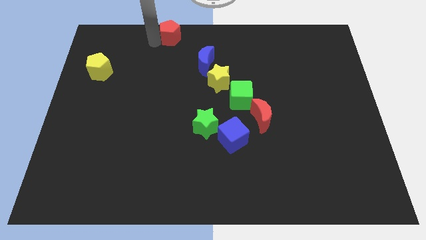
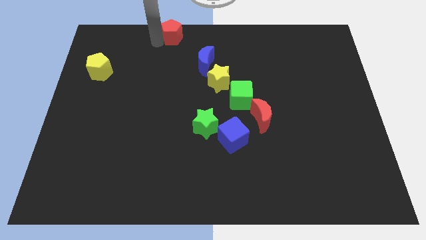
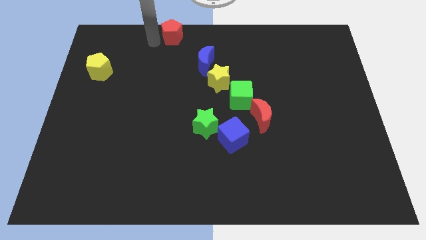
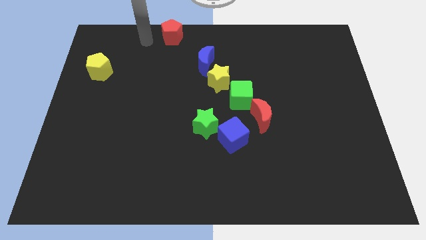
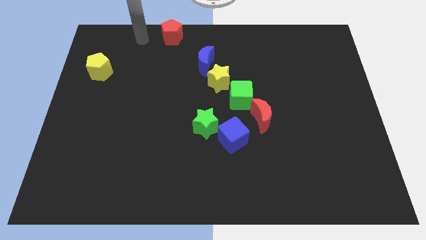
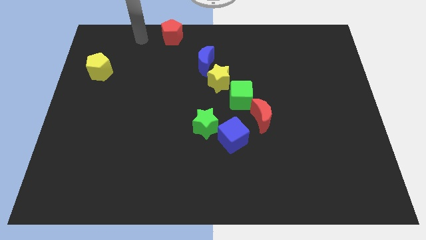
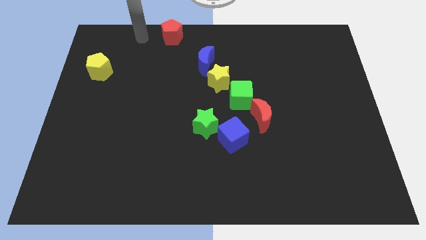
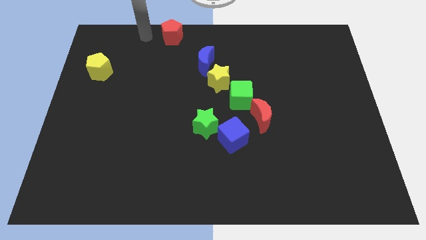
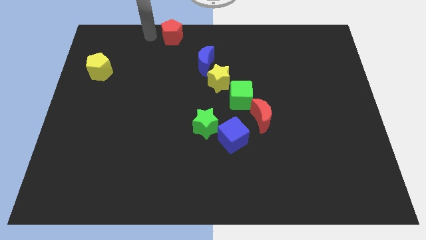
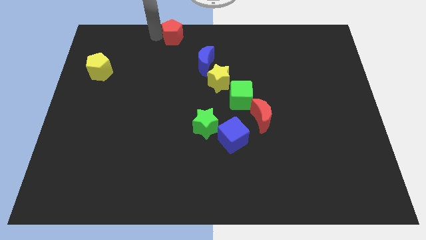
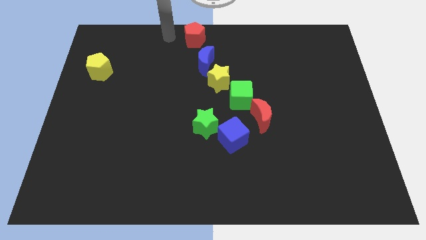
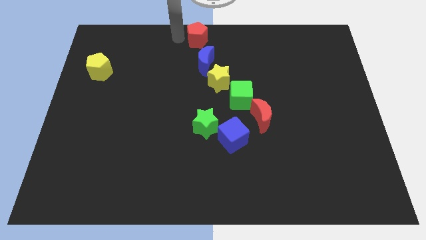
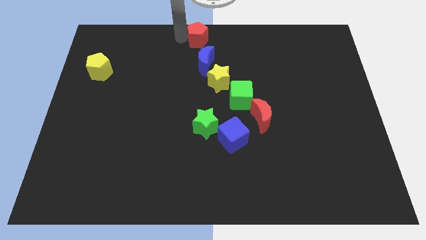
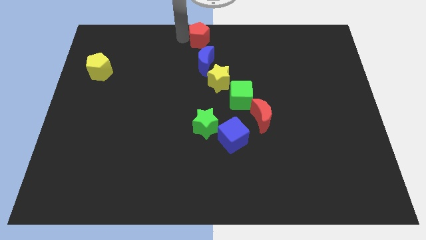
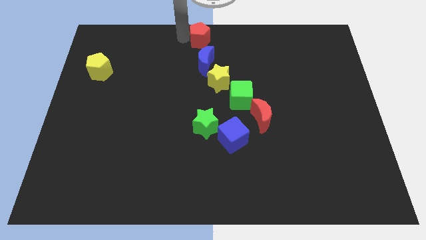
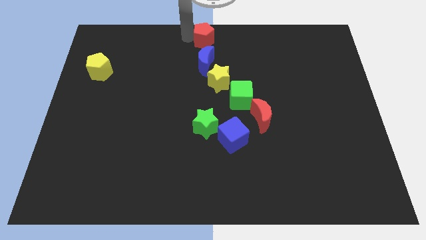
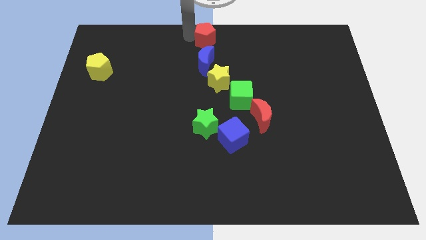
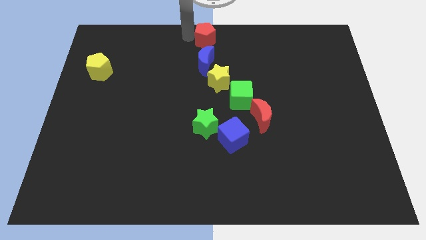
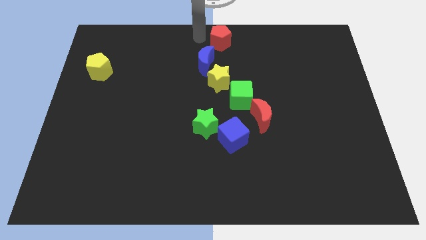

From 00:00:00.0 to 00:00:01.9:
push the red pentagon to the right

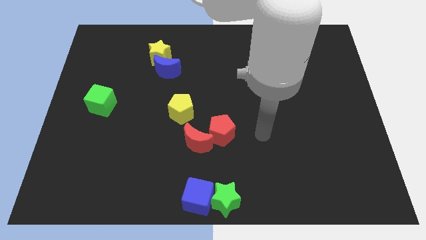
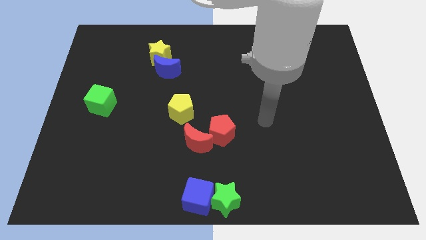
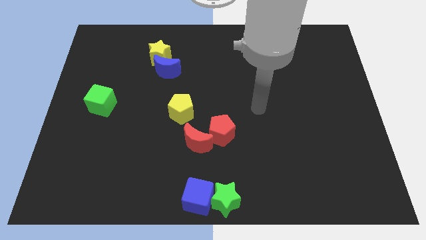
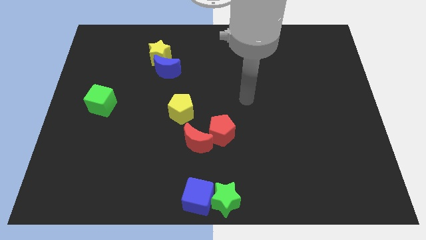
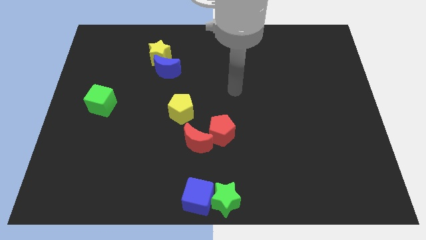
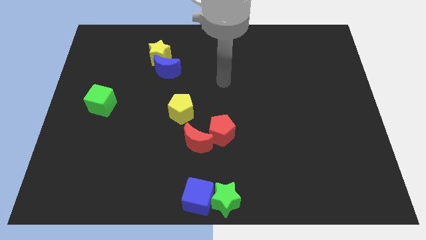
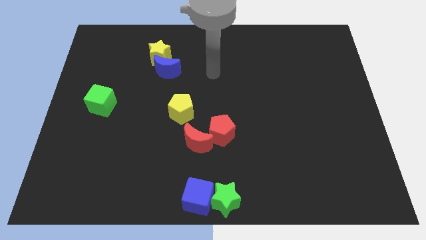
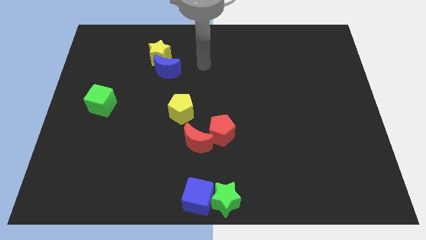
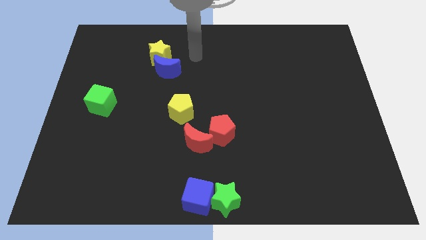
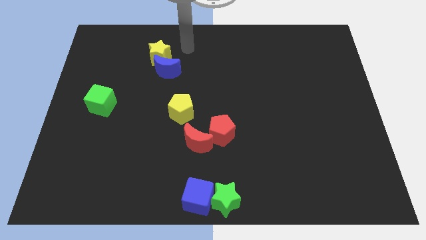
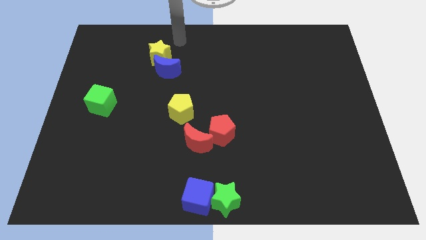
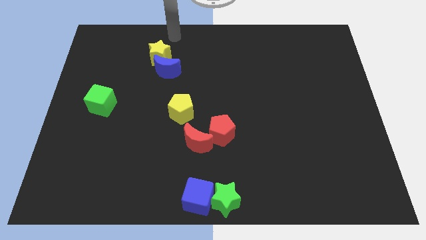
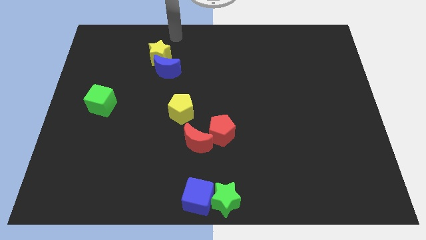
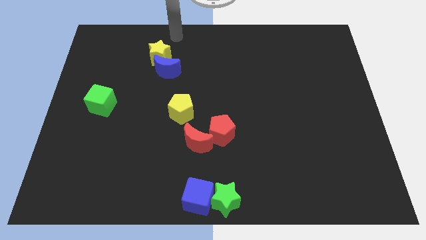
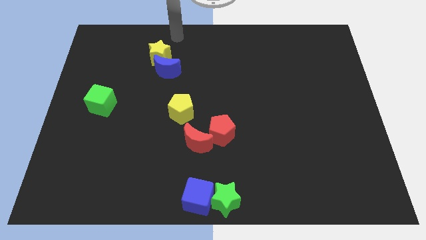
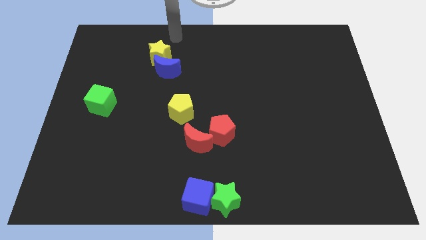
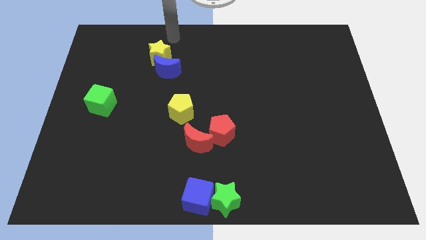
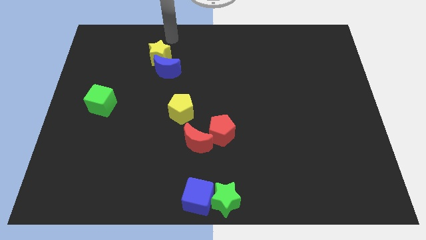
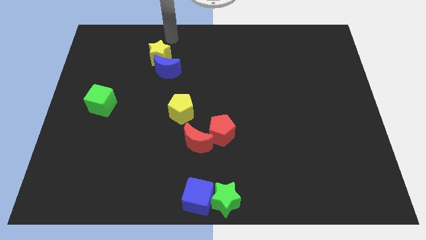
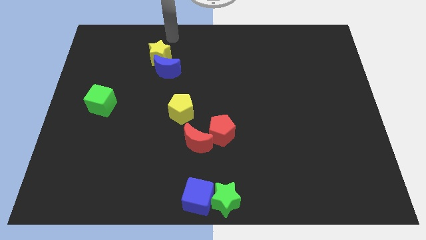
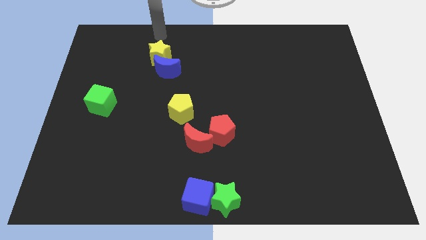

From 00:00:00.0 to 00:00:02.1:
point your arm on top of yellow star

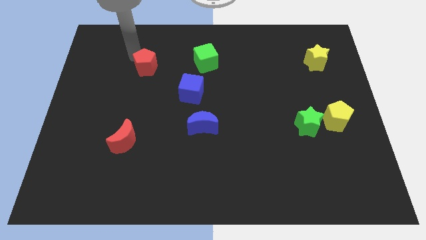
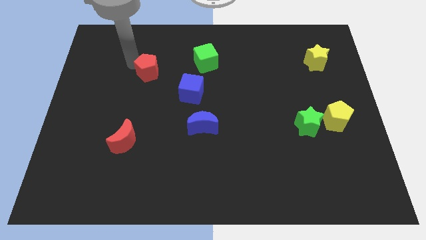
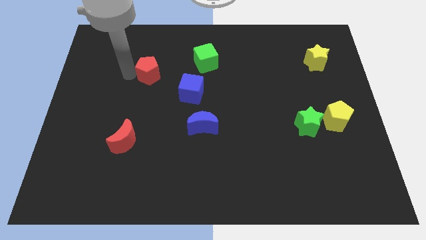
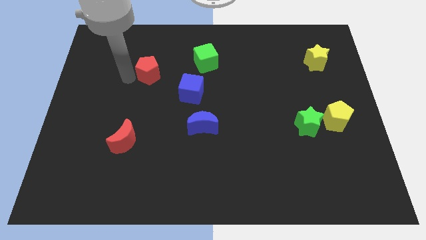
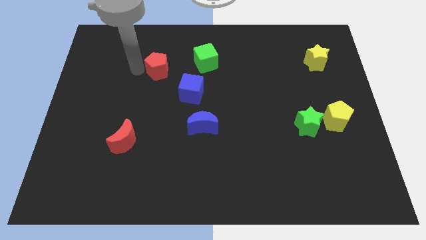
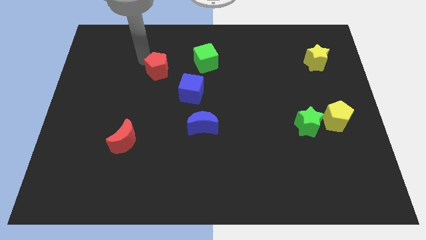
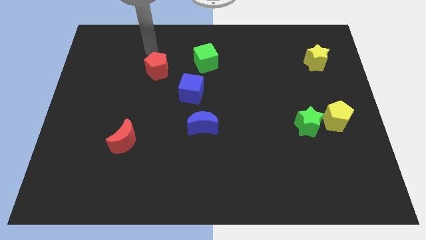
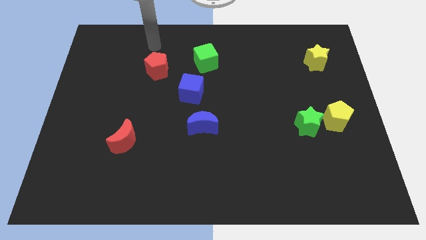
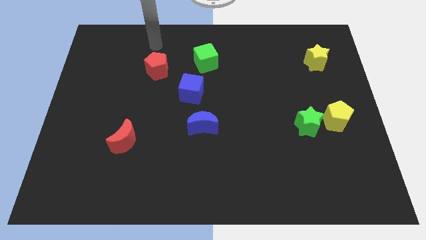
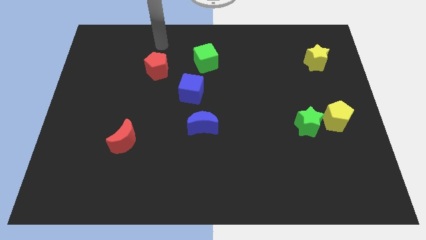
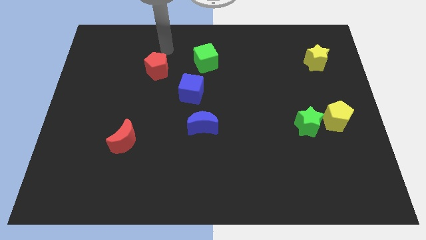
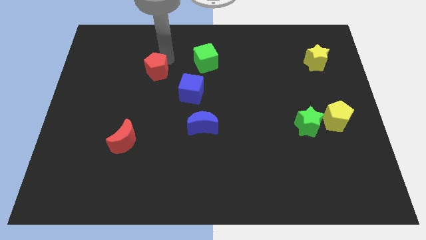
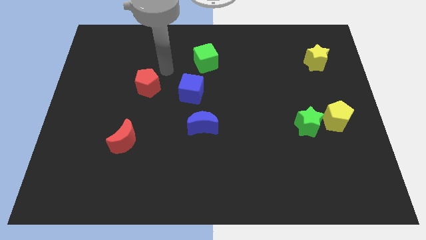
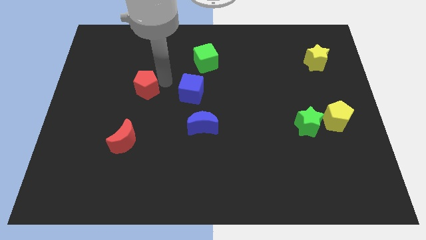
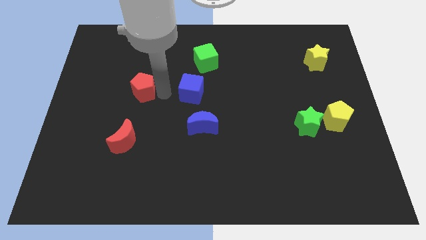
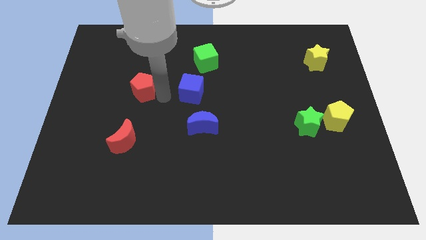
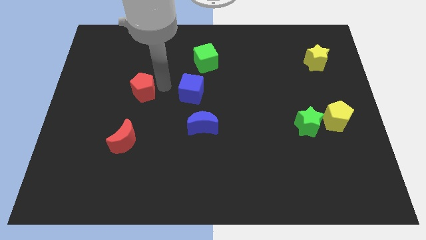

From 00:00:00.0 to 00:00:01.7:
move the red pentagon to the left of the blue cube

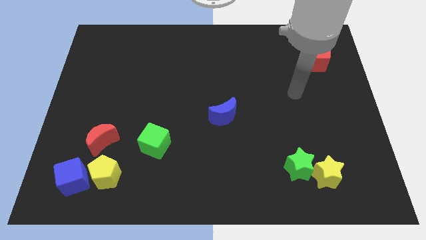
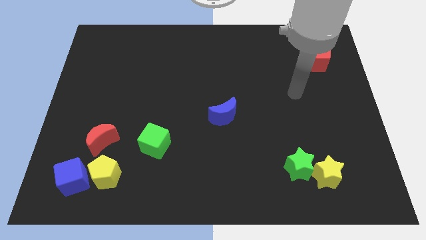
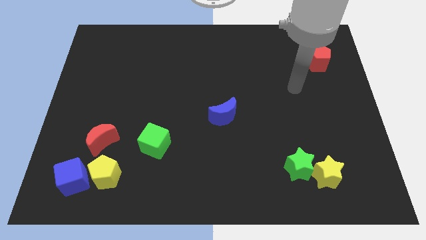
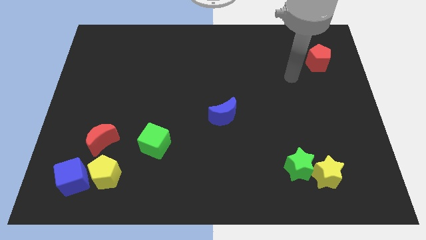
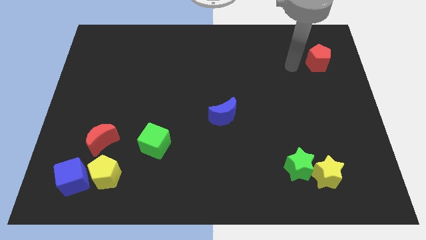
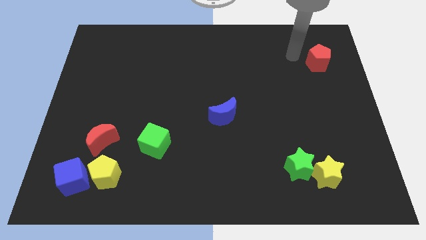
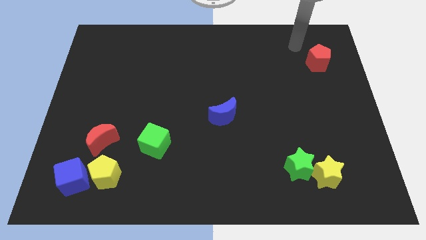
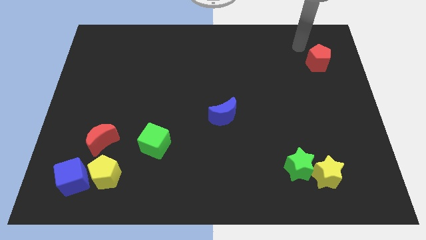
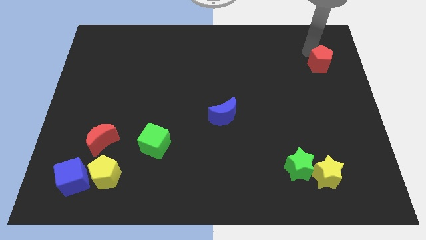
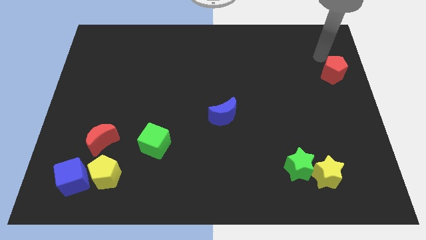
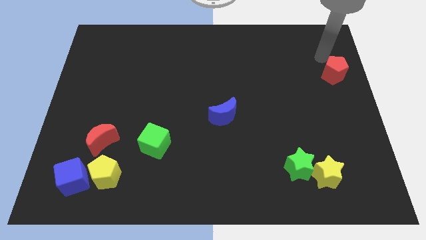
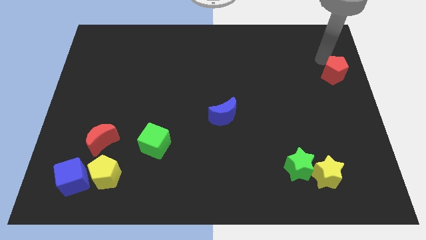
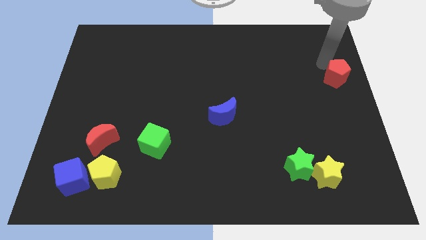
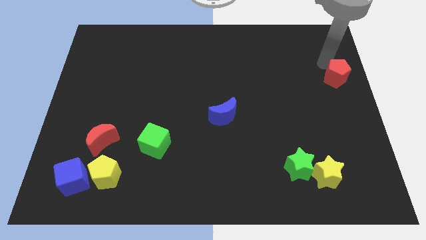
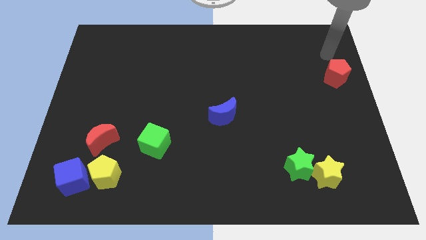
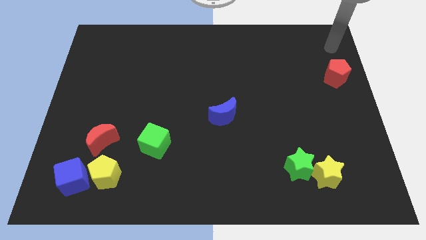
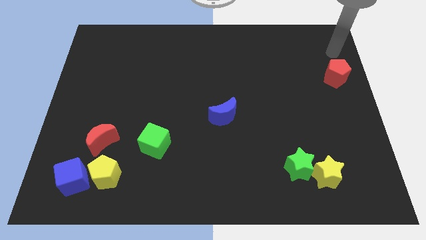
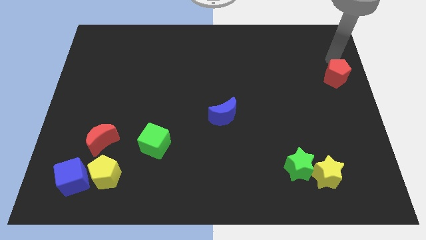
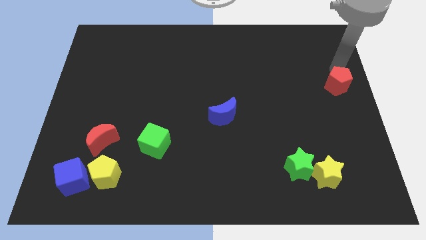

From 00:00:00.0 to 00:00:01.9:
move the red pentagon towards the right center of the board

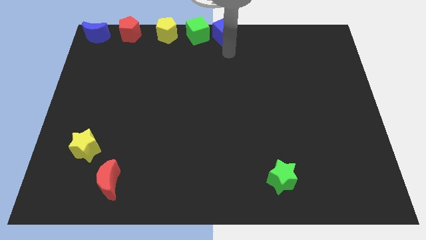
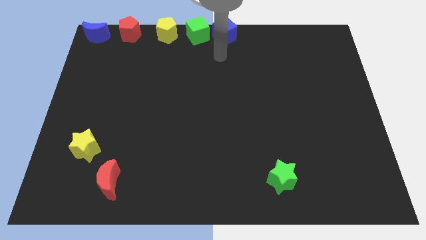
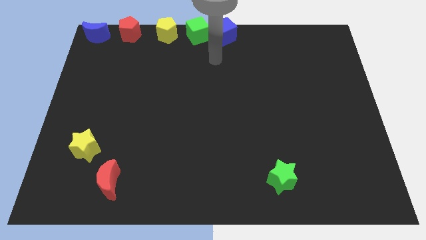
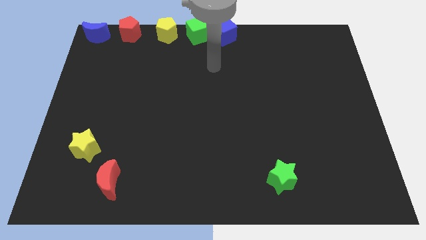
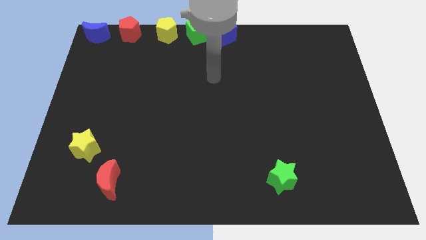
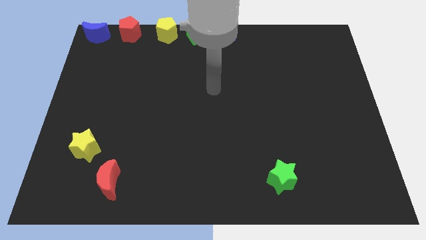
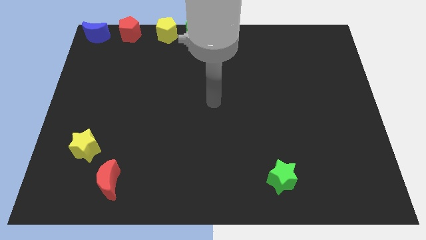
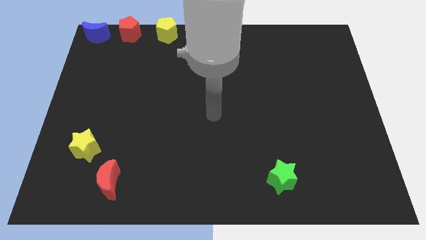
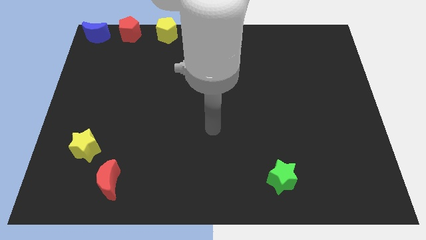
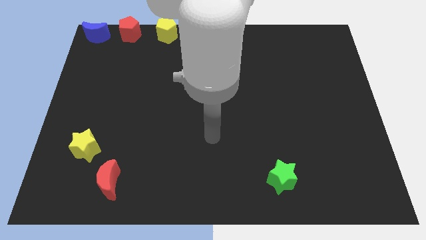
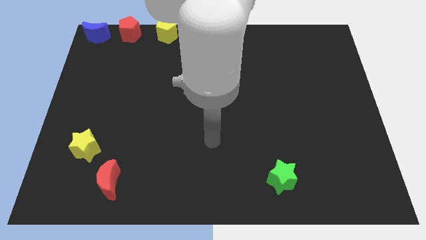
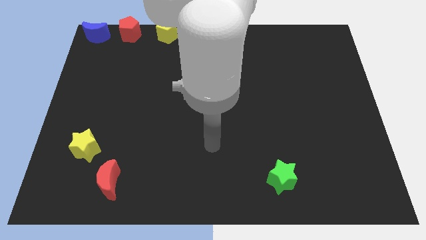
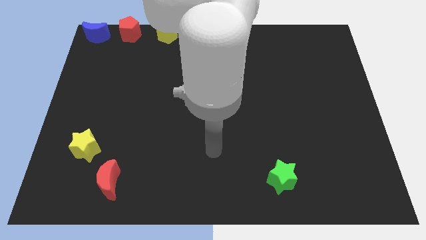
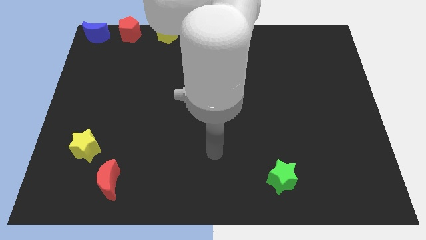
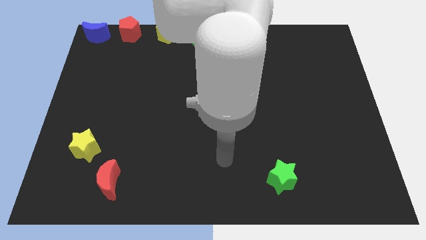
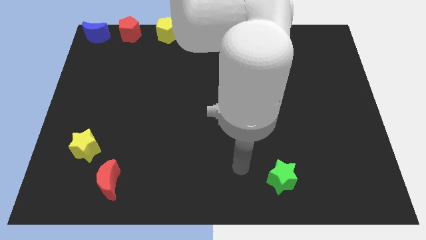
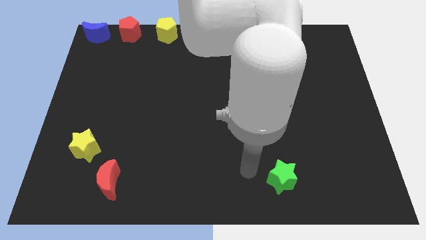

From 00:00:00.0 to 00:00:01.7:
move your arm away from the blue cube
